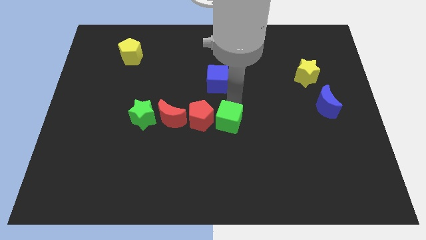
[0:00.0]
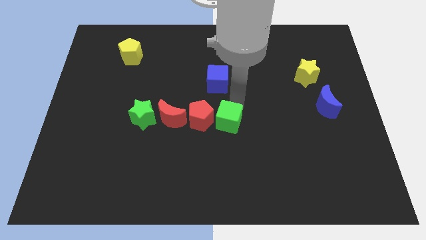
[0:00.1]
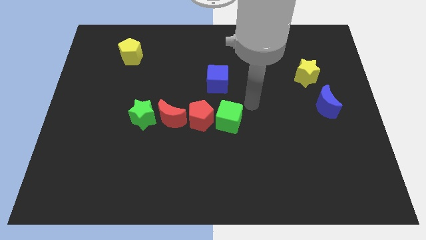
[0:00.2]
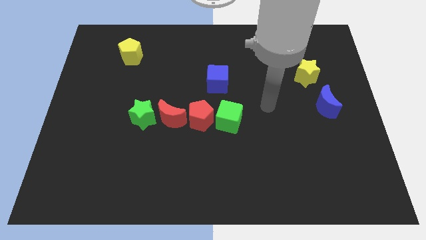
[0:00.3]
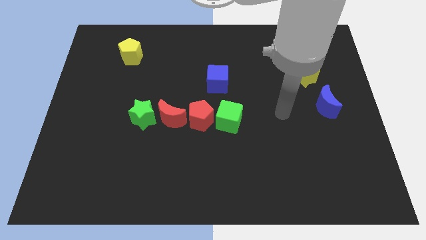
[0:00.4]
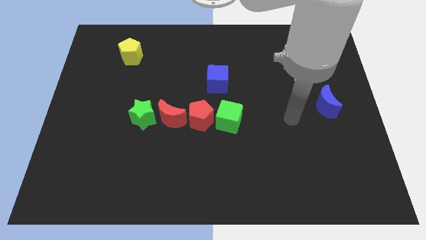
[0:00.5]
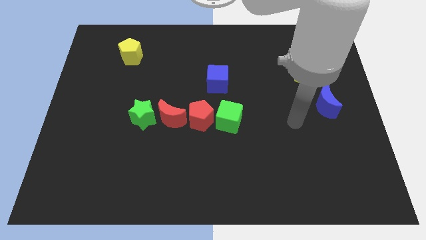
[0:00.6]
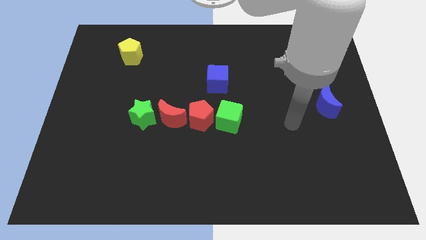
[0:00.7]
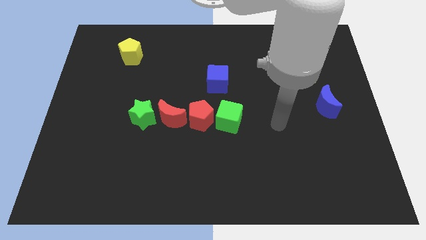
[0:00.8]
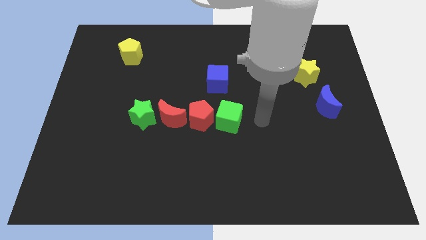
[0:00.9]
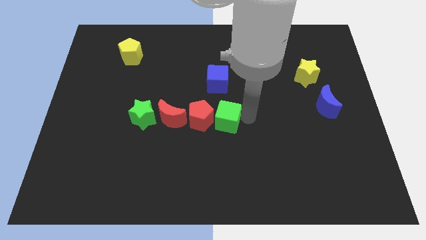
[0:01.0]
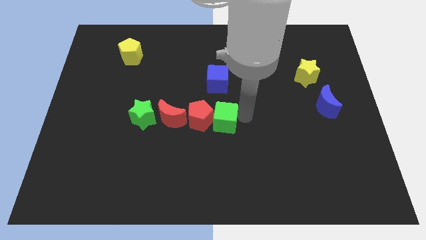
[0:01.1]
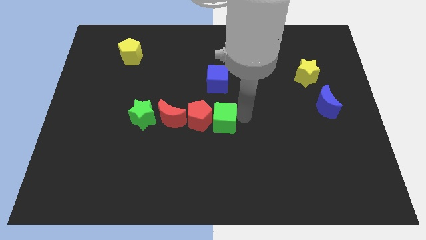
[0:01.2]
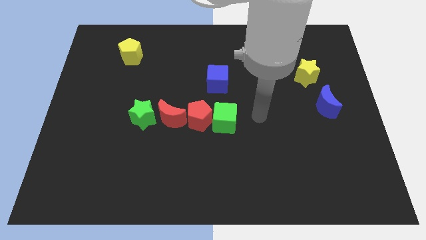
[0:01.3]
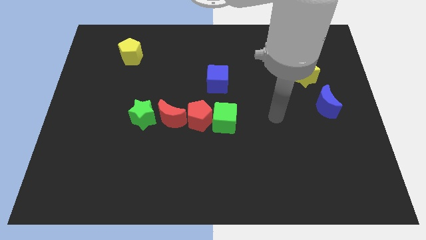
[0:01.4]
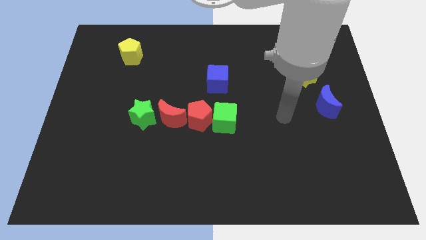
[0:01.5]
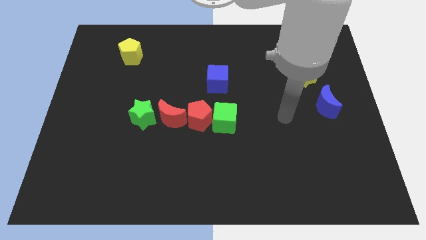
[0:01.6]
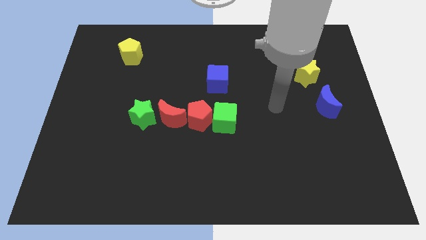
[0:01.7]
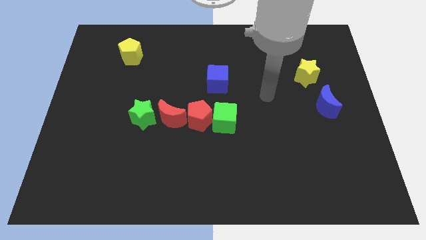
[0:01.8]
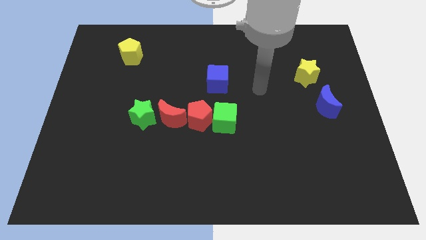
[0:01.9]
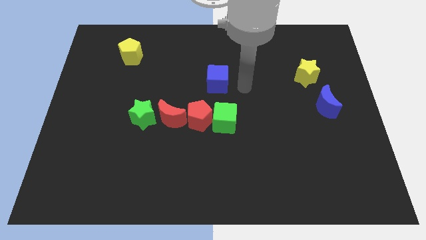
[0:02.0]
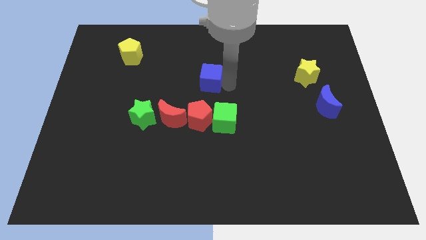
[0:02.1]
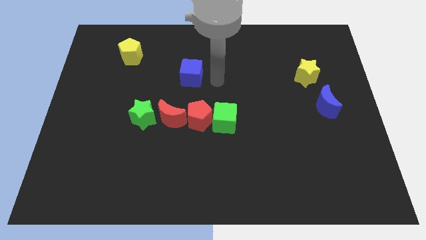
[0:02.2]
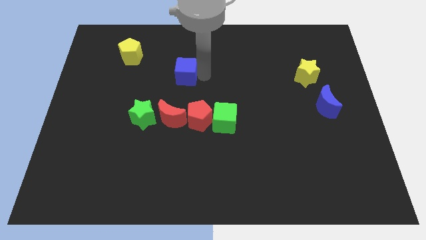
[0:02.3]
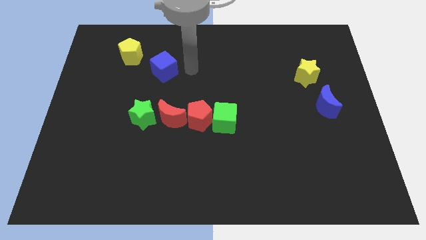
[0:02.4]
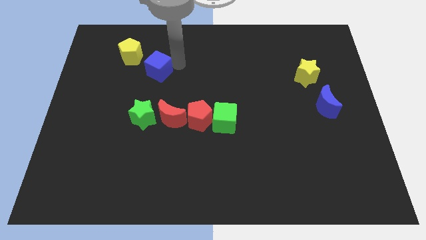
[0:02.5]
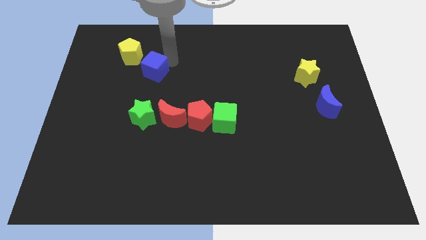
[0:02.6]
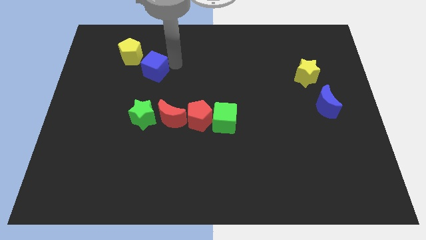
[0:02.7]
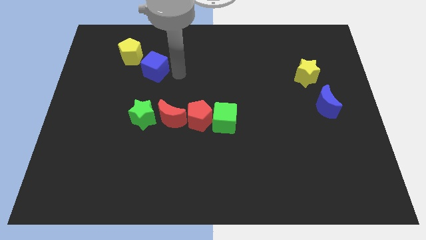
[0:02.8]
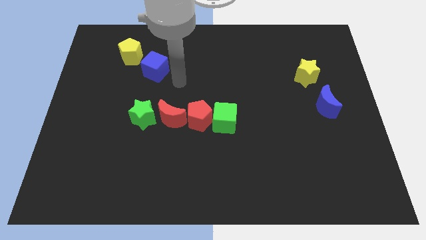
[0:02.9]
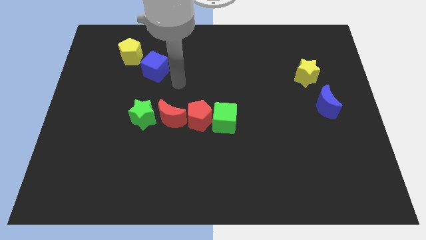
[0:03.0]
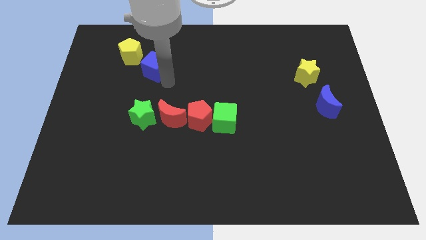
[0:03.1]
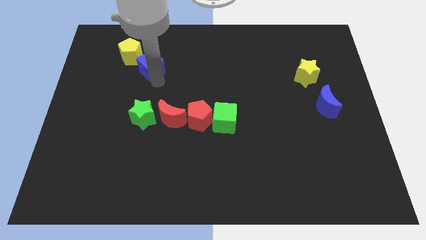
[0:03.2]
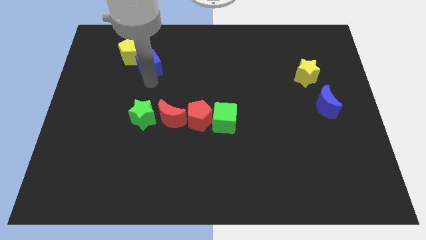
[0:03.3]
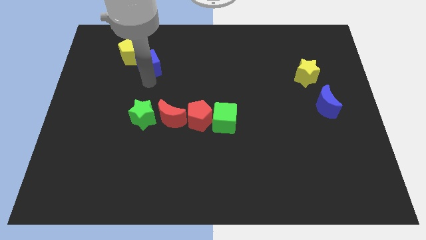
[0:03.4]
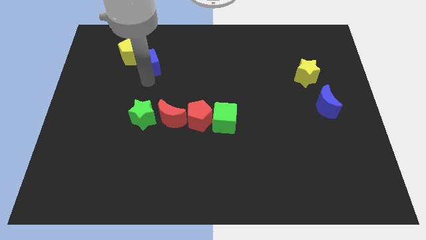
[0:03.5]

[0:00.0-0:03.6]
push blue cube close to the yellow pentagon

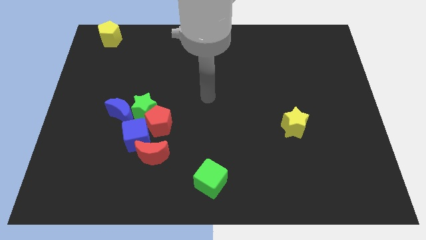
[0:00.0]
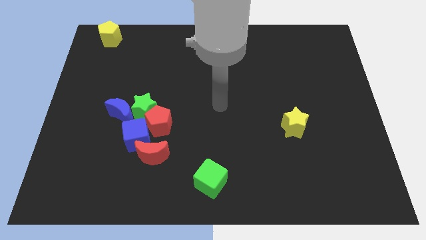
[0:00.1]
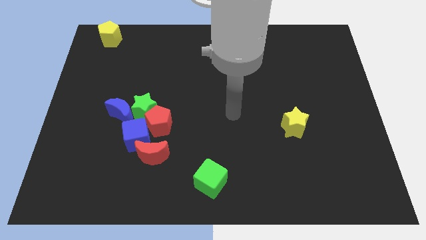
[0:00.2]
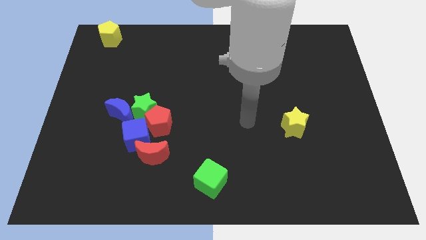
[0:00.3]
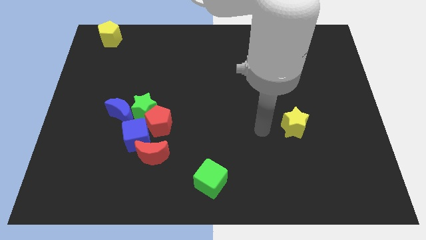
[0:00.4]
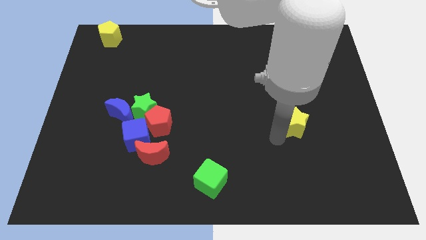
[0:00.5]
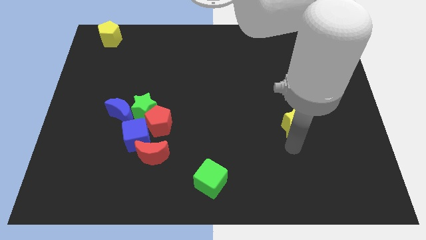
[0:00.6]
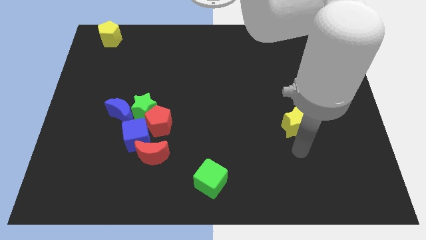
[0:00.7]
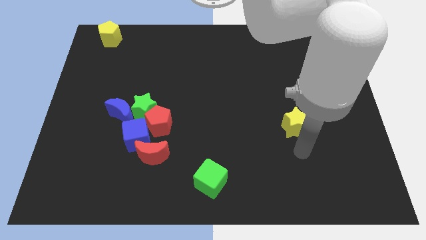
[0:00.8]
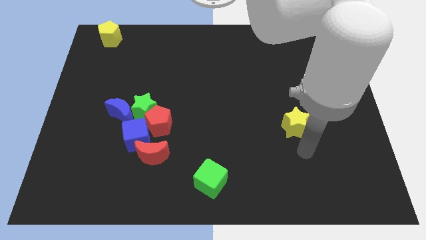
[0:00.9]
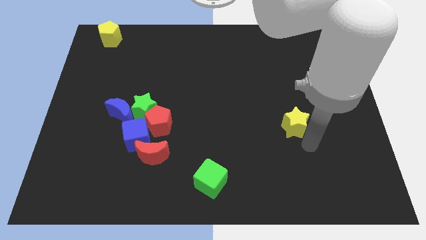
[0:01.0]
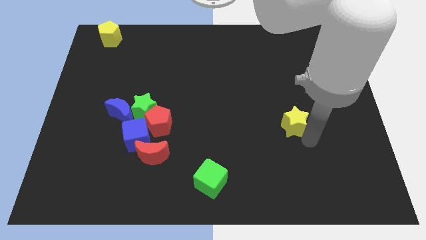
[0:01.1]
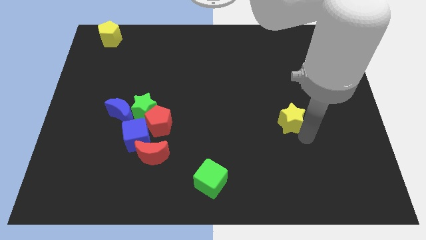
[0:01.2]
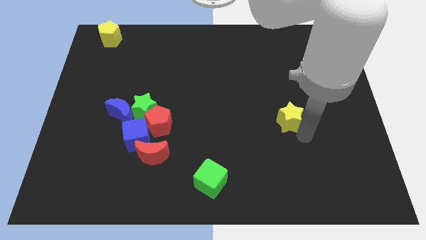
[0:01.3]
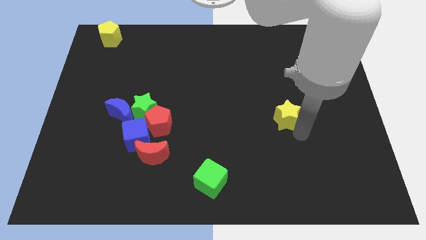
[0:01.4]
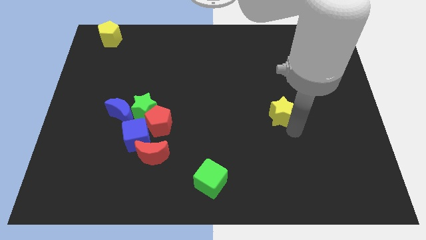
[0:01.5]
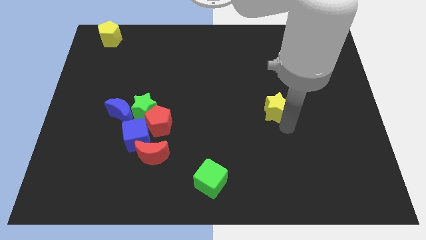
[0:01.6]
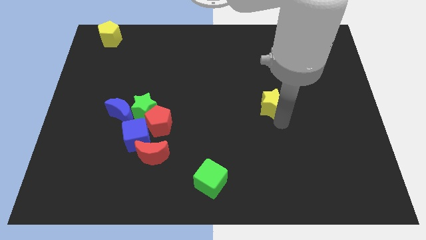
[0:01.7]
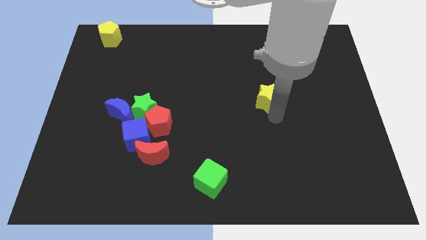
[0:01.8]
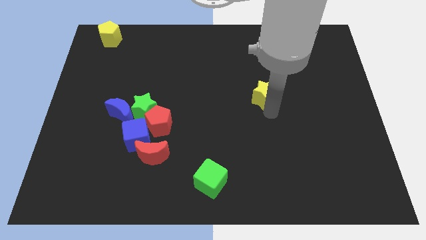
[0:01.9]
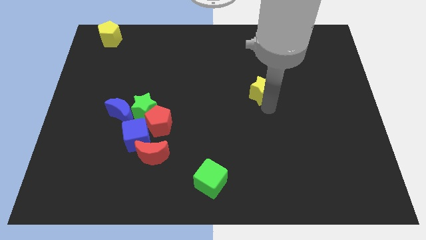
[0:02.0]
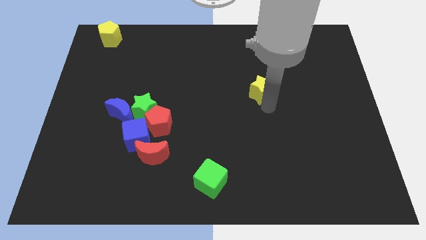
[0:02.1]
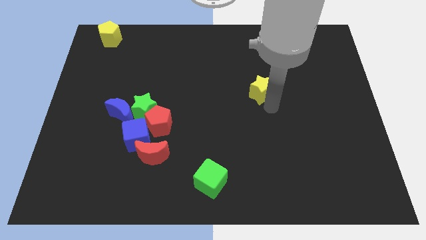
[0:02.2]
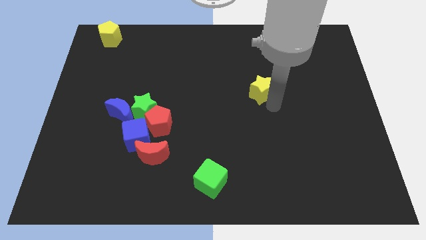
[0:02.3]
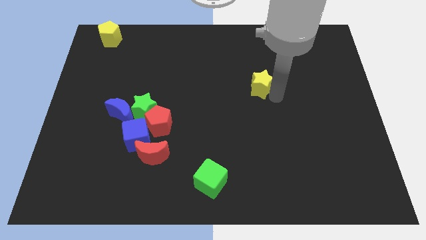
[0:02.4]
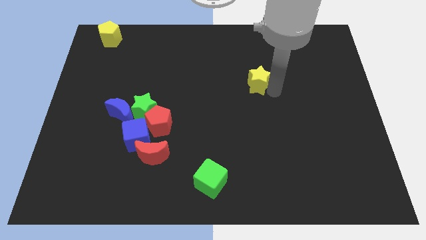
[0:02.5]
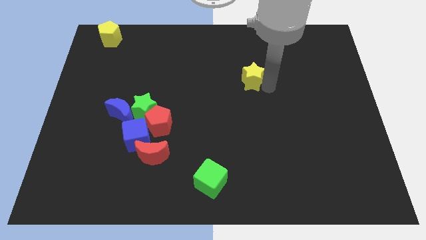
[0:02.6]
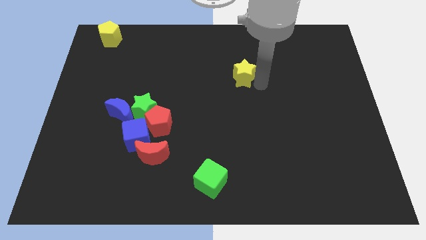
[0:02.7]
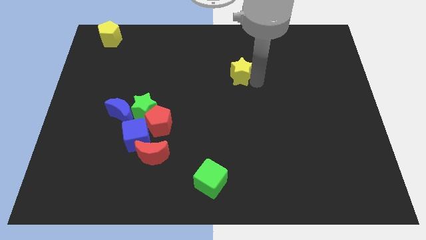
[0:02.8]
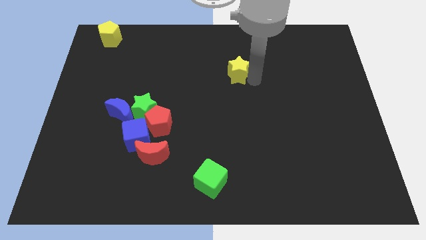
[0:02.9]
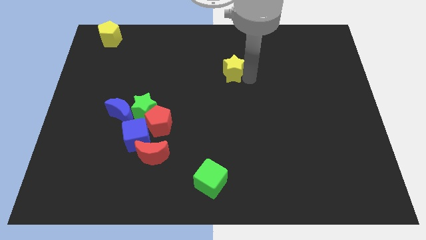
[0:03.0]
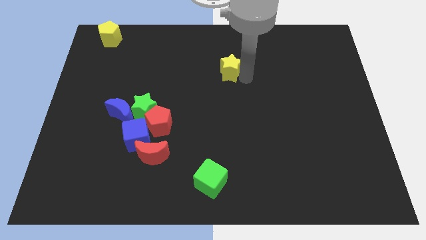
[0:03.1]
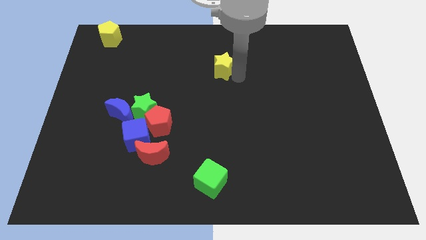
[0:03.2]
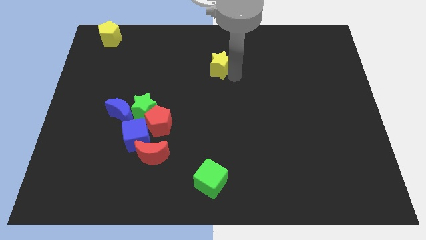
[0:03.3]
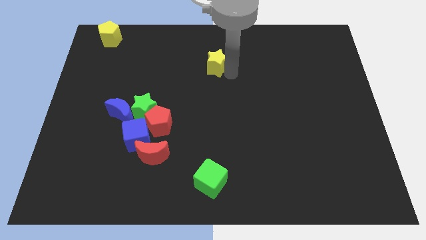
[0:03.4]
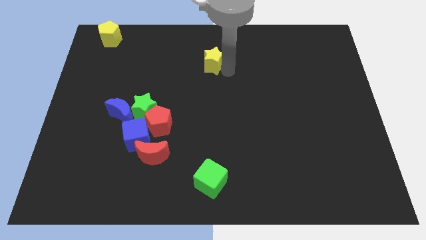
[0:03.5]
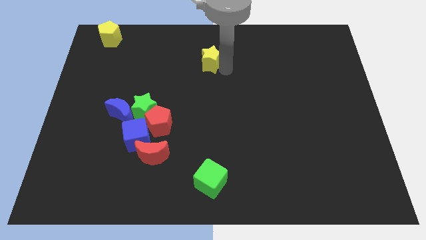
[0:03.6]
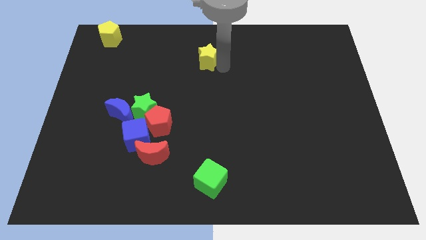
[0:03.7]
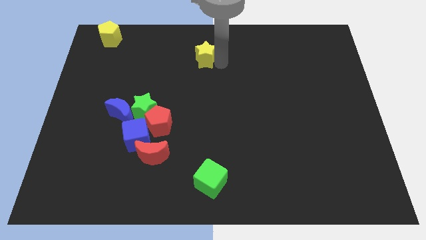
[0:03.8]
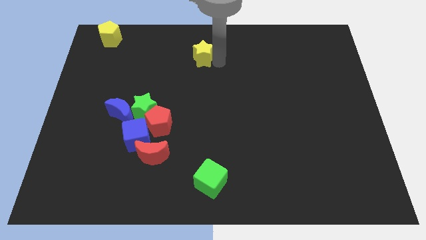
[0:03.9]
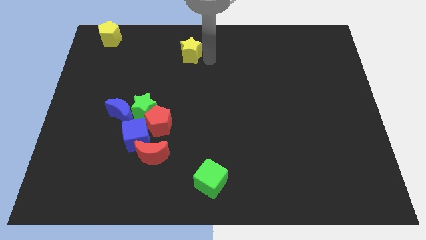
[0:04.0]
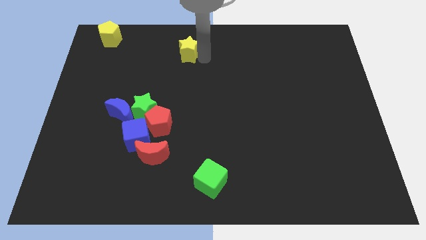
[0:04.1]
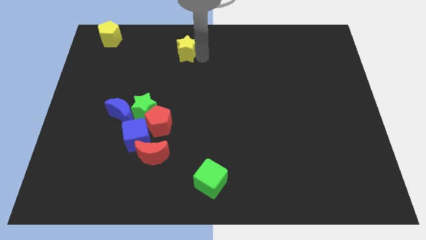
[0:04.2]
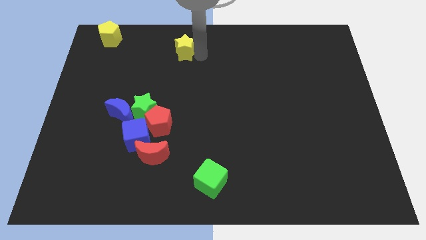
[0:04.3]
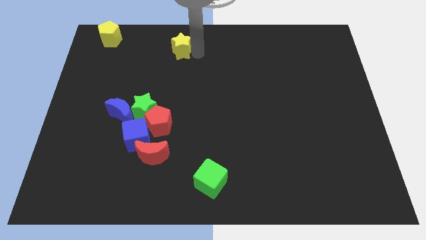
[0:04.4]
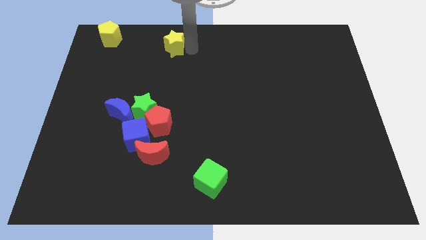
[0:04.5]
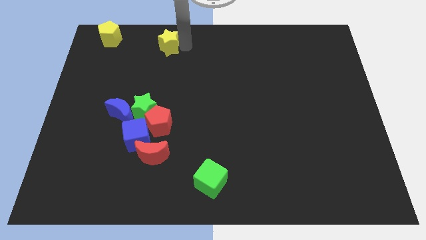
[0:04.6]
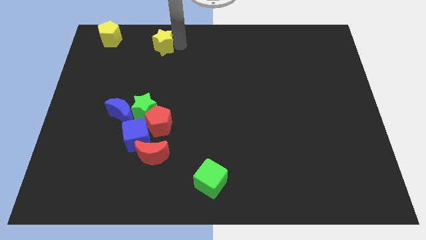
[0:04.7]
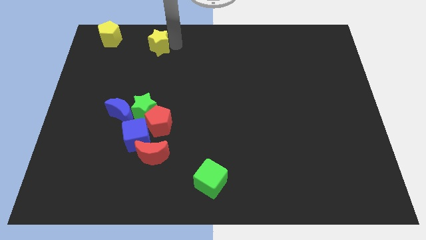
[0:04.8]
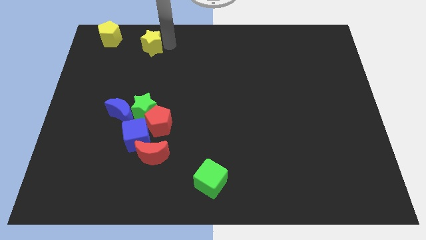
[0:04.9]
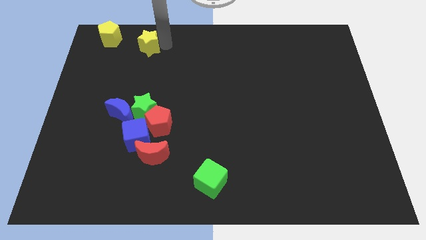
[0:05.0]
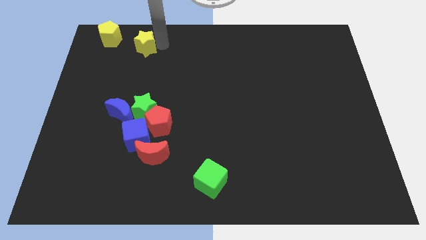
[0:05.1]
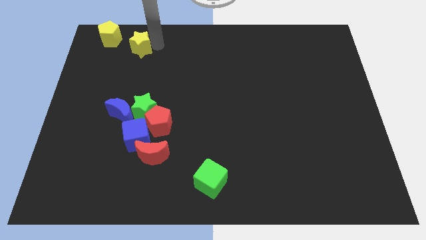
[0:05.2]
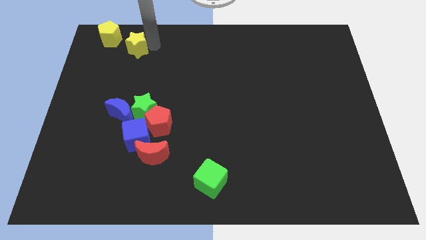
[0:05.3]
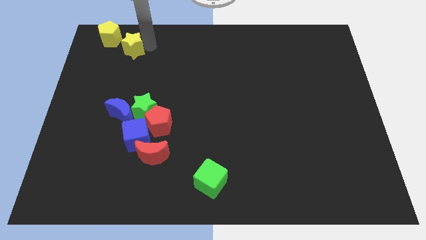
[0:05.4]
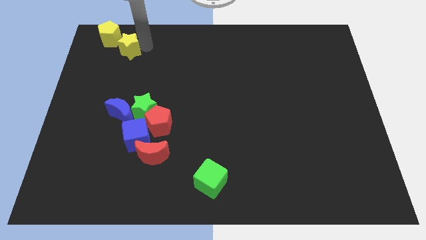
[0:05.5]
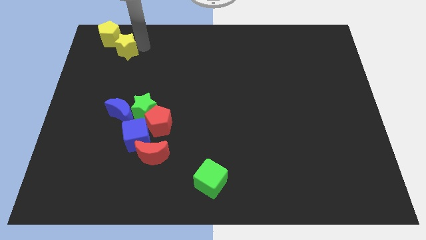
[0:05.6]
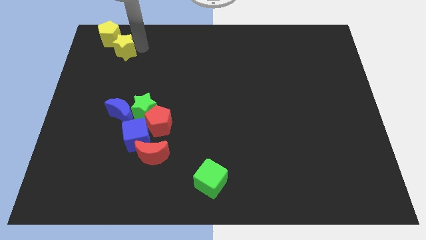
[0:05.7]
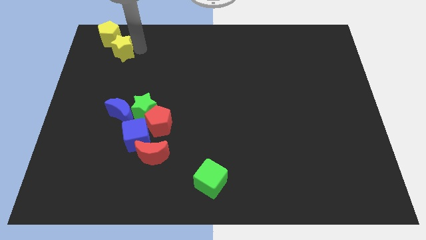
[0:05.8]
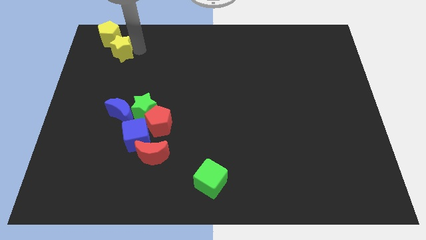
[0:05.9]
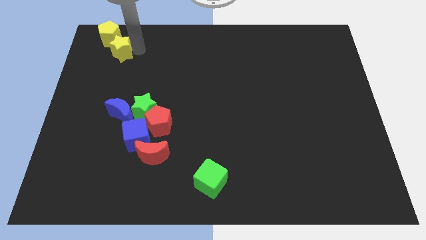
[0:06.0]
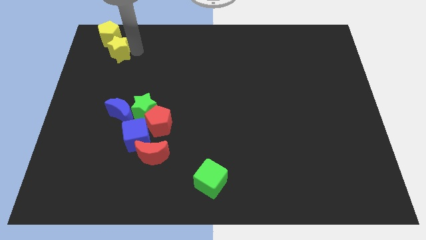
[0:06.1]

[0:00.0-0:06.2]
push the yellow star to the bottom right of the yellow pentagon
